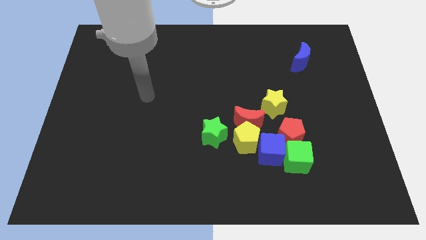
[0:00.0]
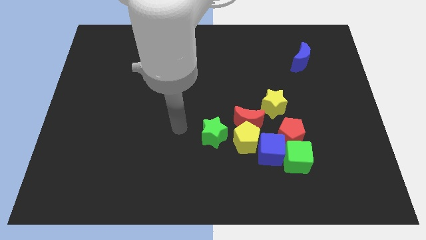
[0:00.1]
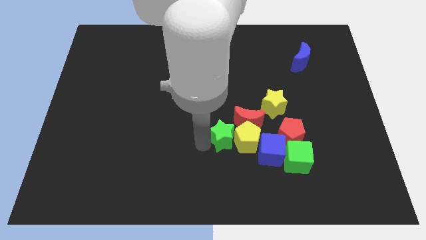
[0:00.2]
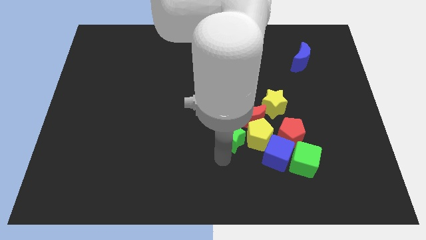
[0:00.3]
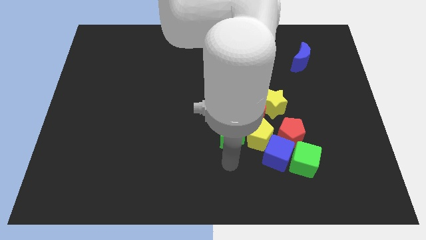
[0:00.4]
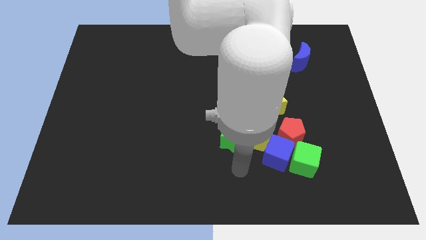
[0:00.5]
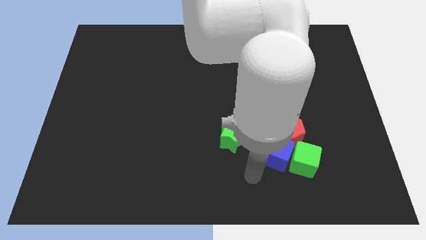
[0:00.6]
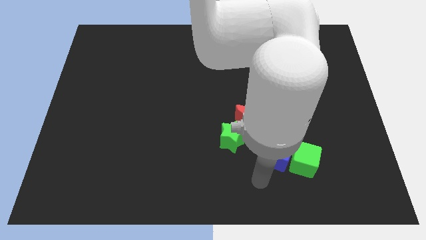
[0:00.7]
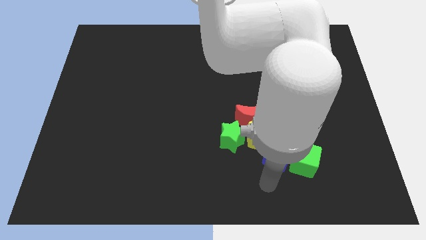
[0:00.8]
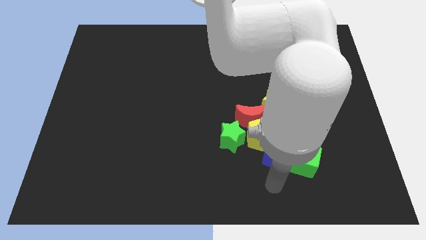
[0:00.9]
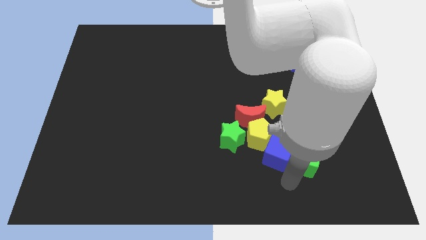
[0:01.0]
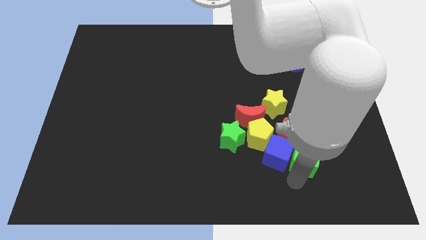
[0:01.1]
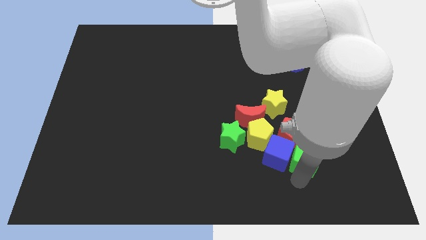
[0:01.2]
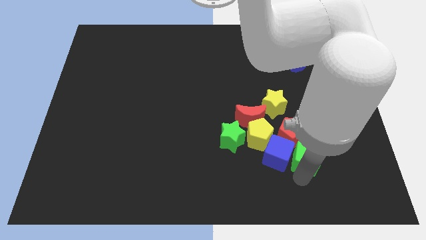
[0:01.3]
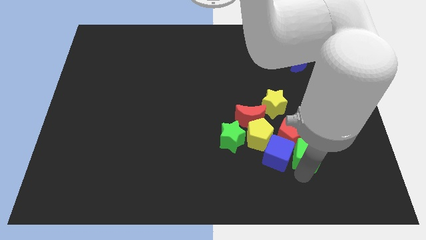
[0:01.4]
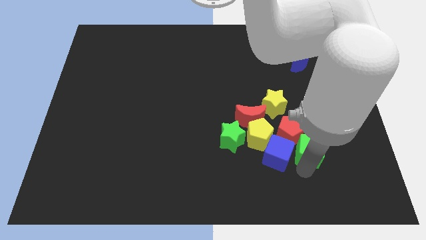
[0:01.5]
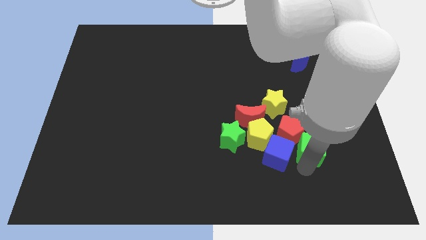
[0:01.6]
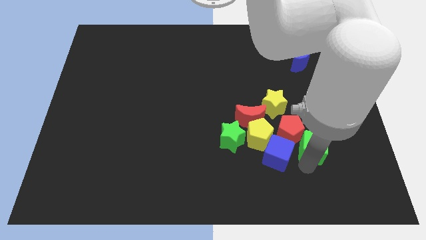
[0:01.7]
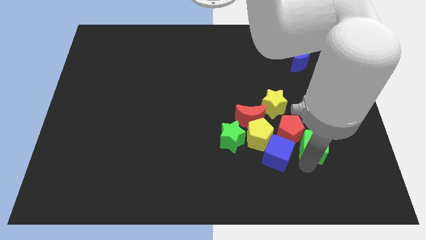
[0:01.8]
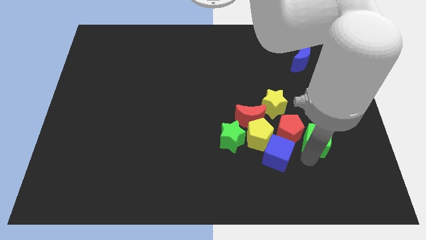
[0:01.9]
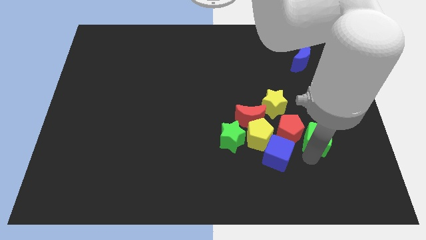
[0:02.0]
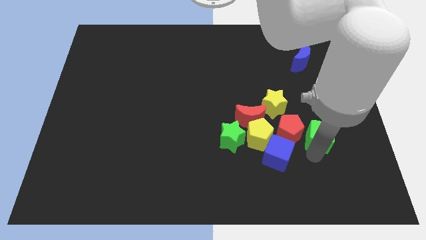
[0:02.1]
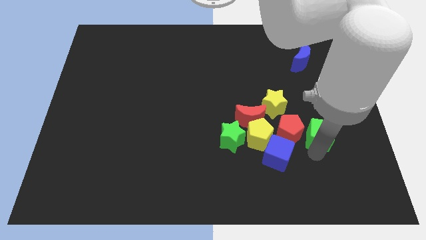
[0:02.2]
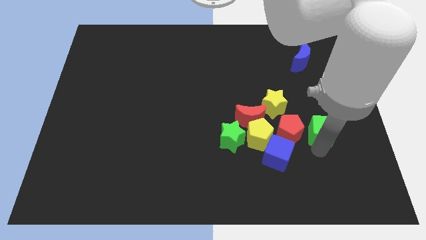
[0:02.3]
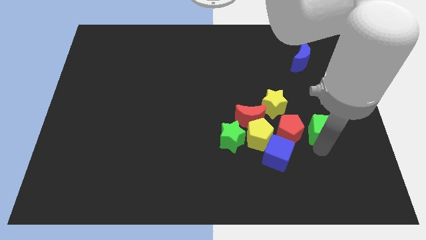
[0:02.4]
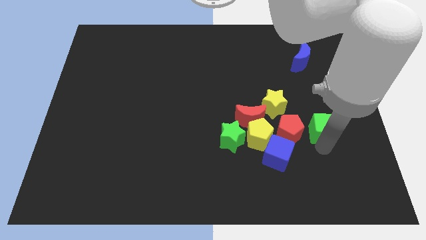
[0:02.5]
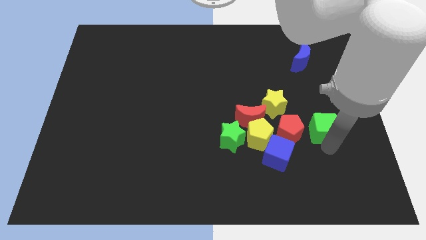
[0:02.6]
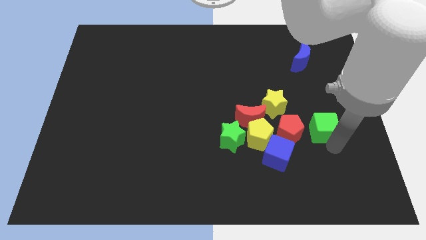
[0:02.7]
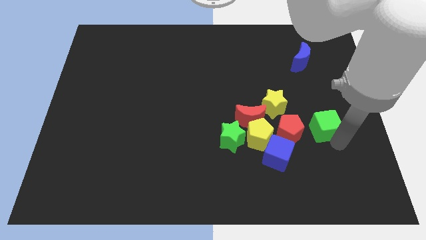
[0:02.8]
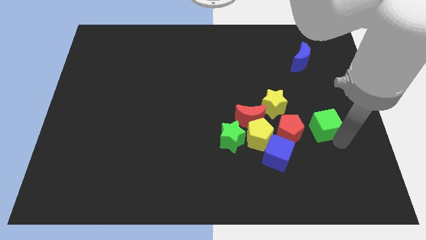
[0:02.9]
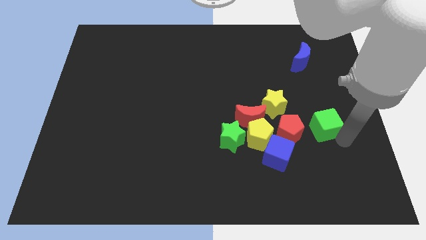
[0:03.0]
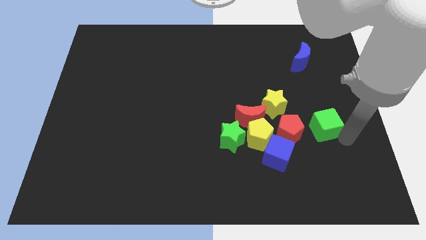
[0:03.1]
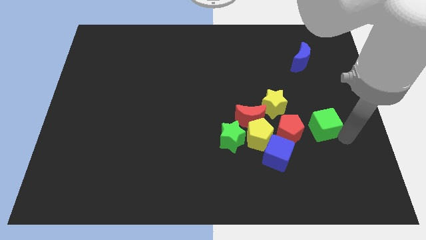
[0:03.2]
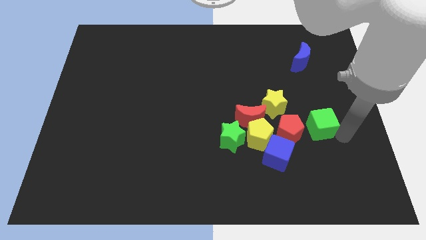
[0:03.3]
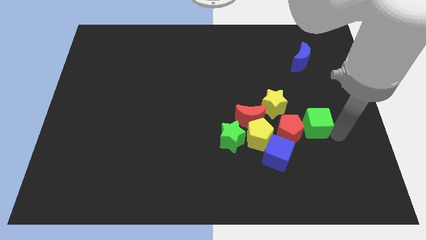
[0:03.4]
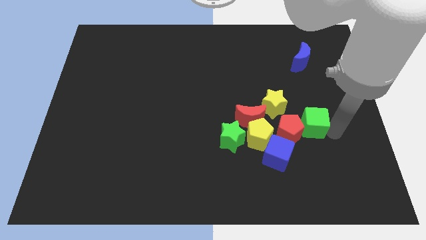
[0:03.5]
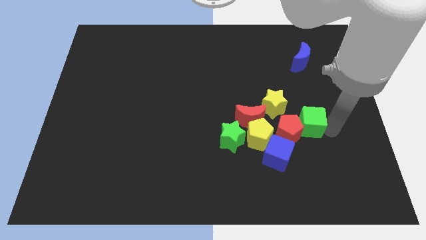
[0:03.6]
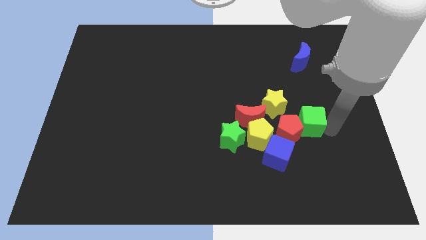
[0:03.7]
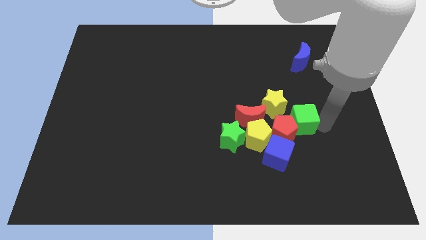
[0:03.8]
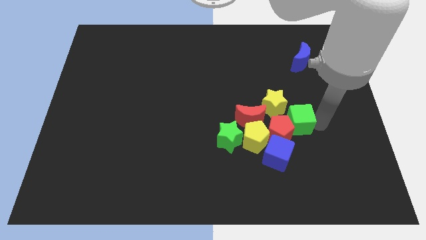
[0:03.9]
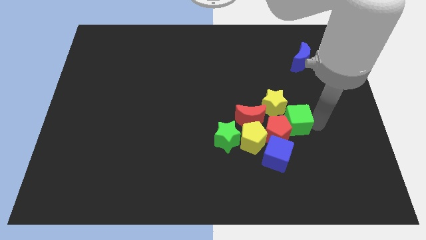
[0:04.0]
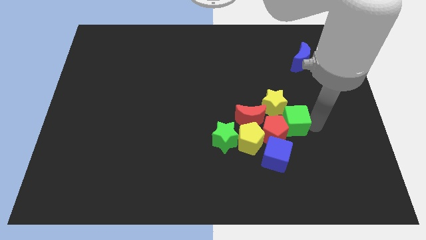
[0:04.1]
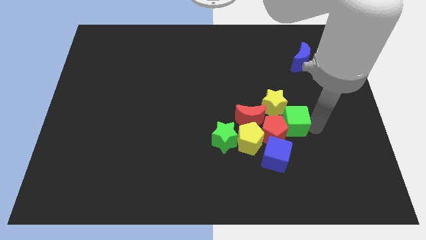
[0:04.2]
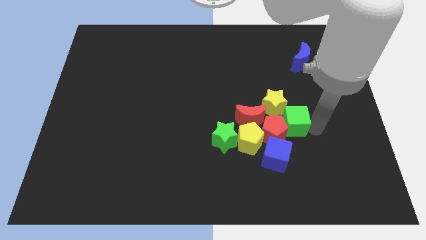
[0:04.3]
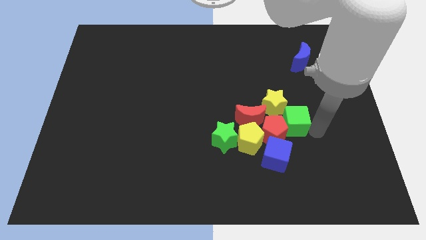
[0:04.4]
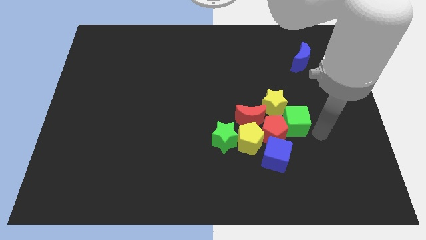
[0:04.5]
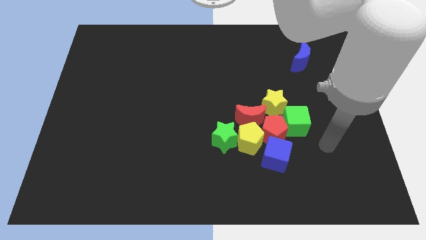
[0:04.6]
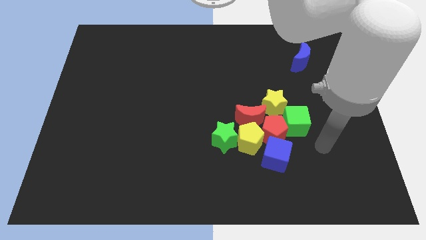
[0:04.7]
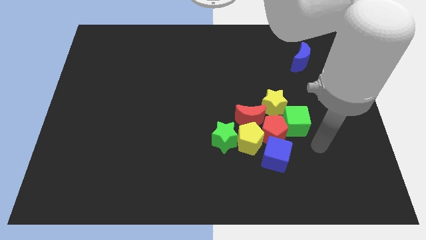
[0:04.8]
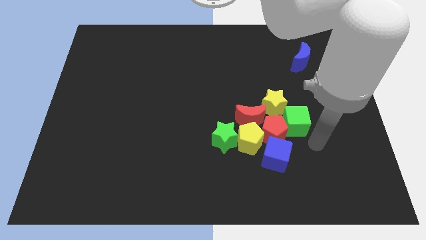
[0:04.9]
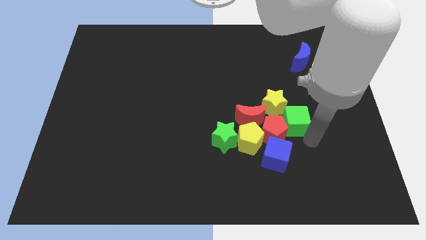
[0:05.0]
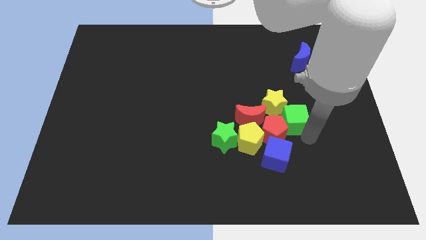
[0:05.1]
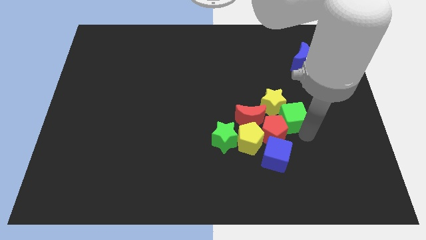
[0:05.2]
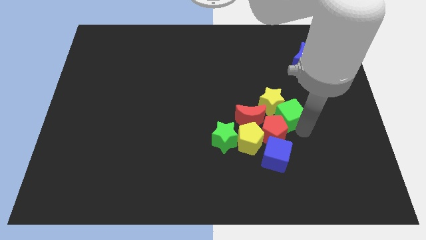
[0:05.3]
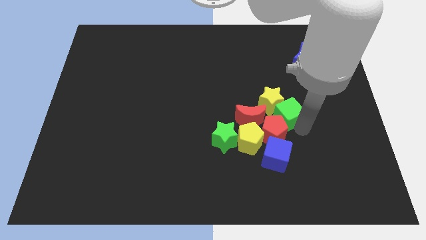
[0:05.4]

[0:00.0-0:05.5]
move the green cube towards the yellow star

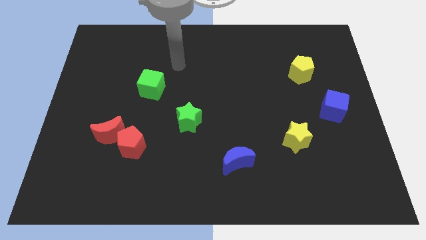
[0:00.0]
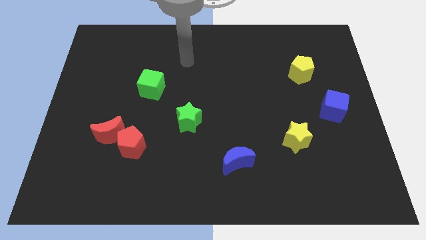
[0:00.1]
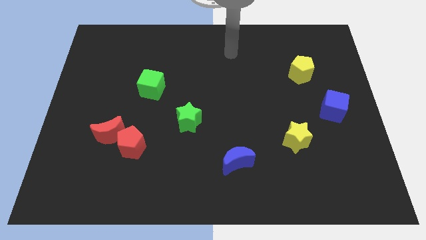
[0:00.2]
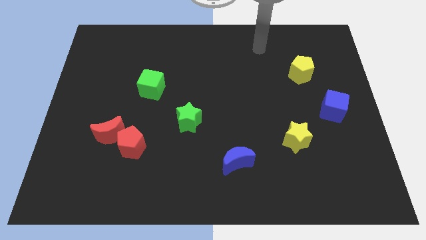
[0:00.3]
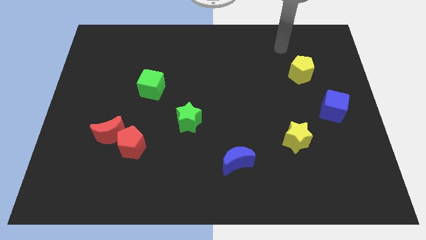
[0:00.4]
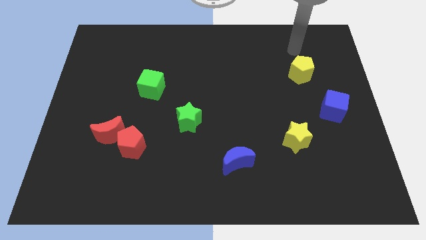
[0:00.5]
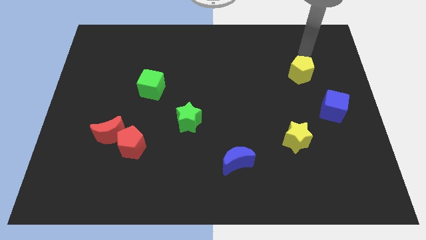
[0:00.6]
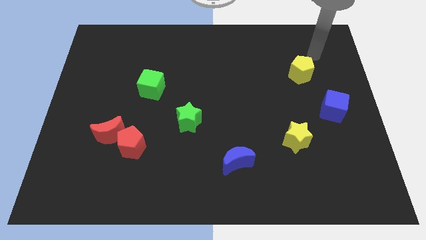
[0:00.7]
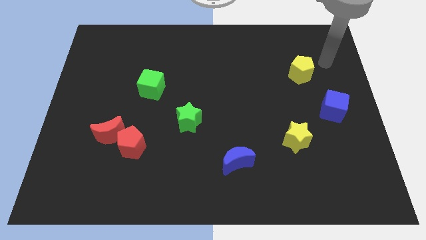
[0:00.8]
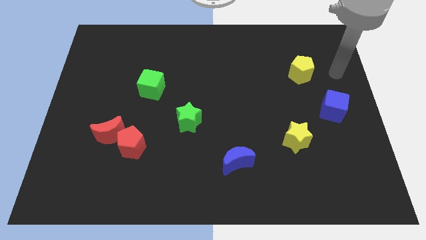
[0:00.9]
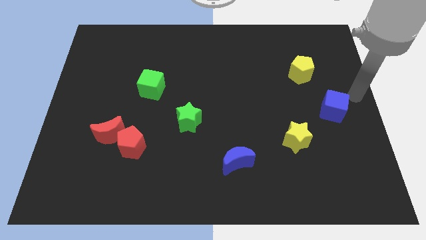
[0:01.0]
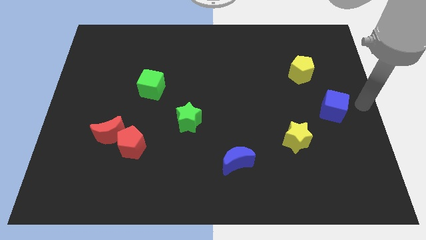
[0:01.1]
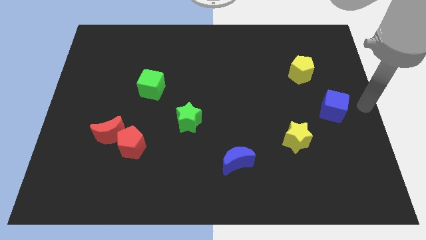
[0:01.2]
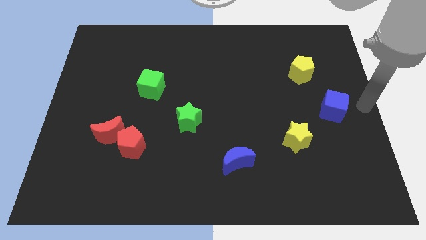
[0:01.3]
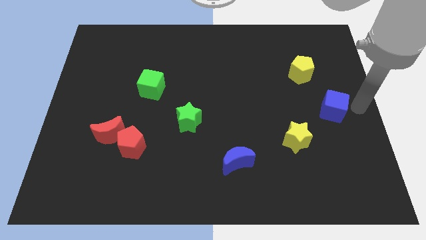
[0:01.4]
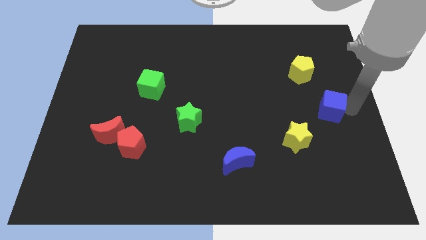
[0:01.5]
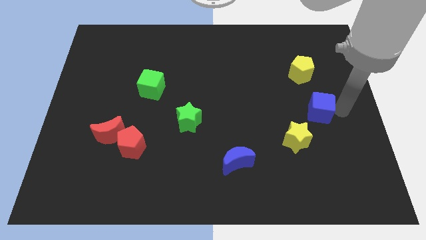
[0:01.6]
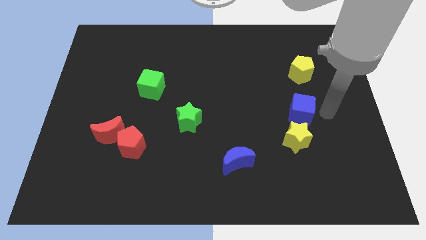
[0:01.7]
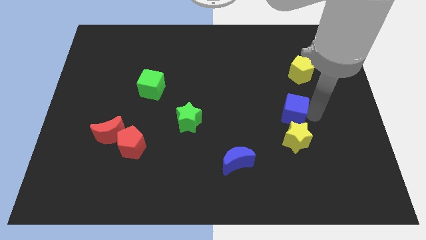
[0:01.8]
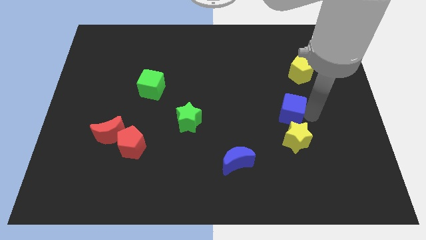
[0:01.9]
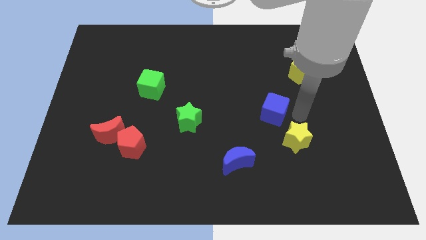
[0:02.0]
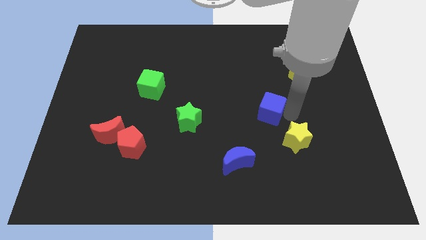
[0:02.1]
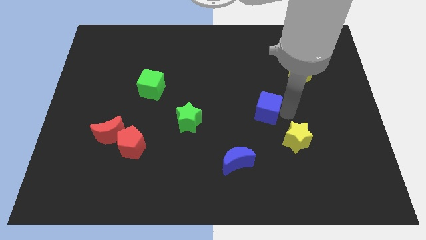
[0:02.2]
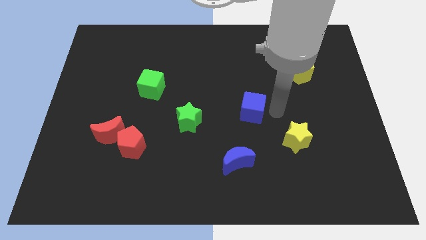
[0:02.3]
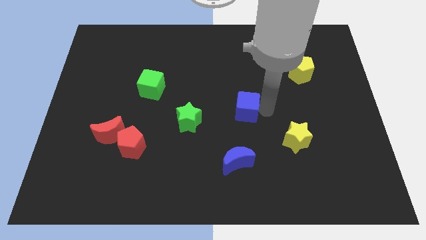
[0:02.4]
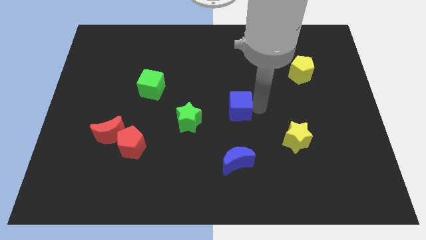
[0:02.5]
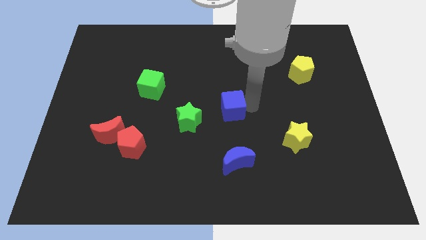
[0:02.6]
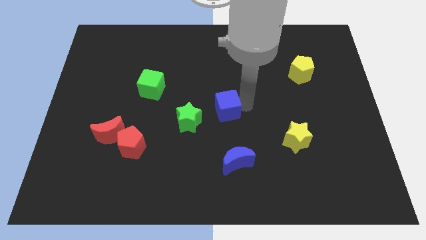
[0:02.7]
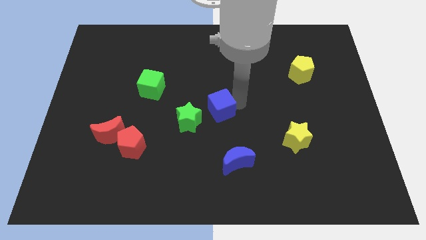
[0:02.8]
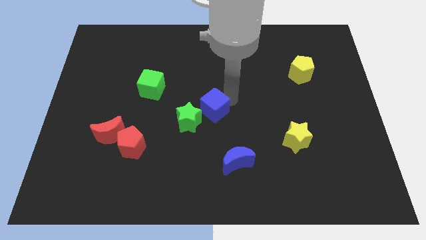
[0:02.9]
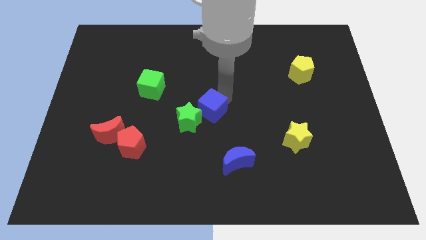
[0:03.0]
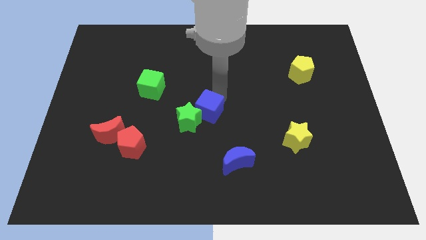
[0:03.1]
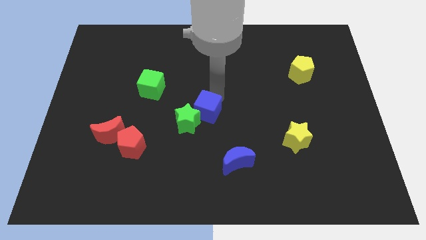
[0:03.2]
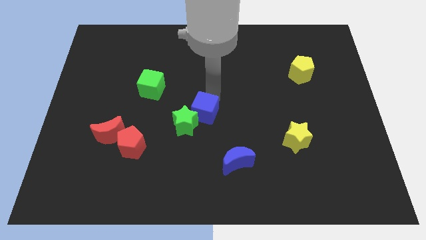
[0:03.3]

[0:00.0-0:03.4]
push the blue cube next to the green star
